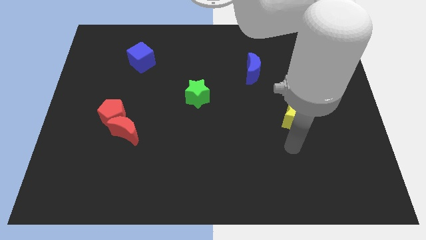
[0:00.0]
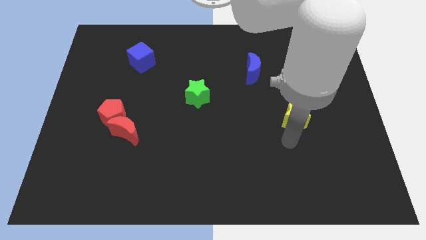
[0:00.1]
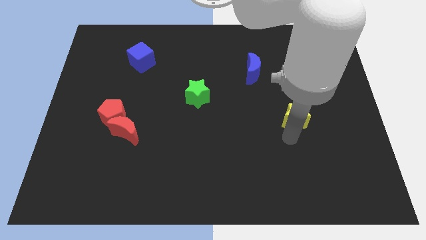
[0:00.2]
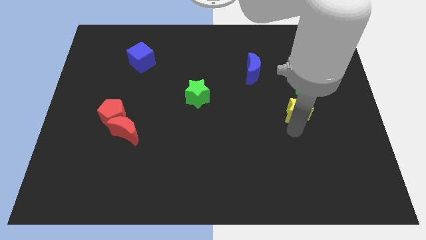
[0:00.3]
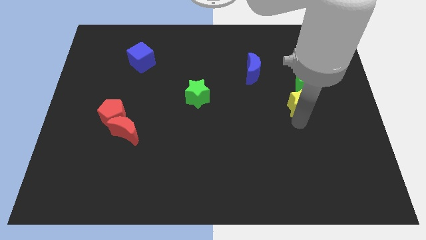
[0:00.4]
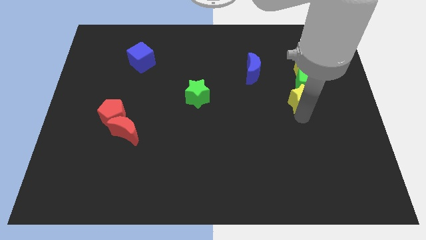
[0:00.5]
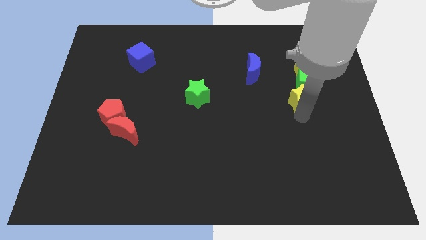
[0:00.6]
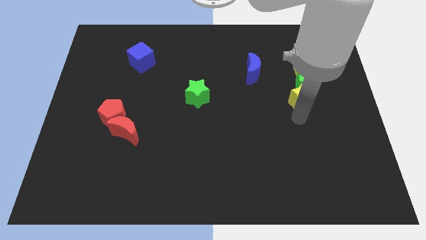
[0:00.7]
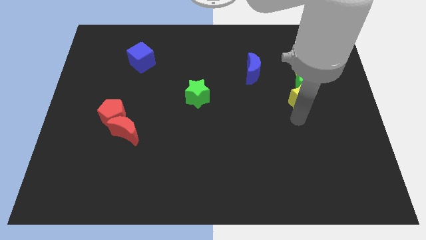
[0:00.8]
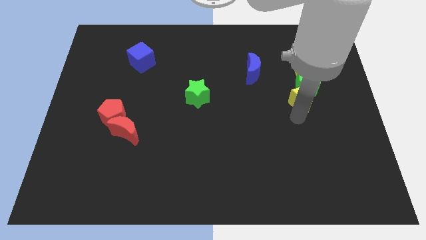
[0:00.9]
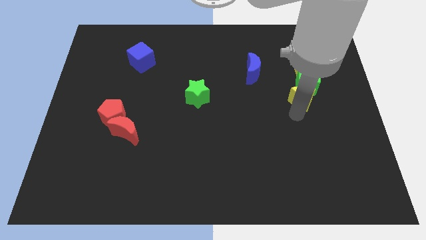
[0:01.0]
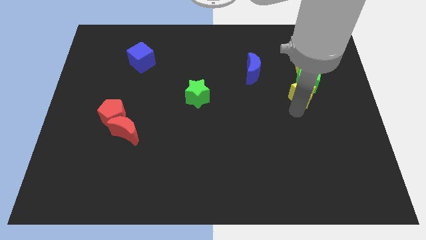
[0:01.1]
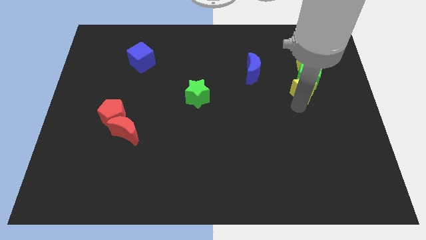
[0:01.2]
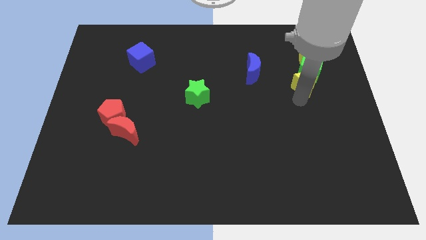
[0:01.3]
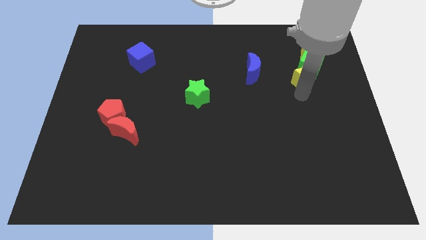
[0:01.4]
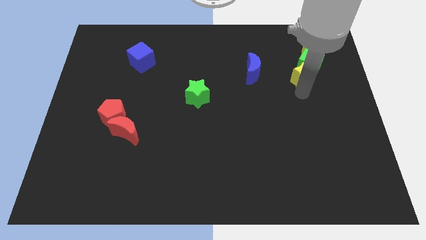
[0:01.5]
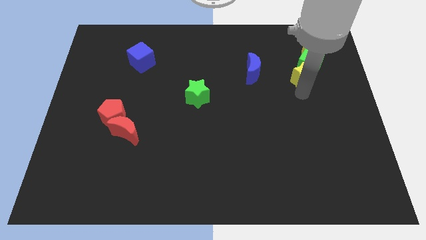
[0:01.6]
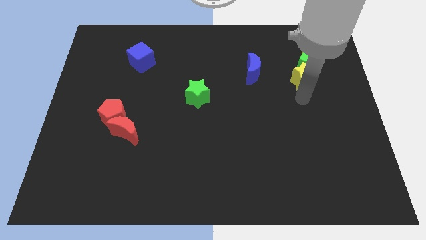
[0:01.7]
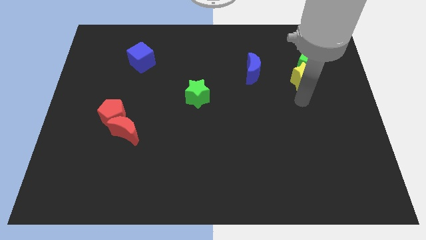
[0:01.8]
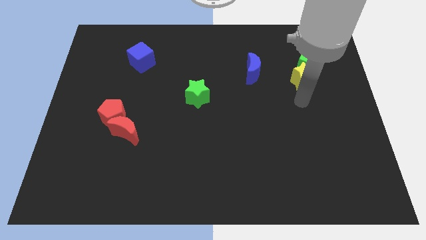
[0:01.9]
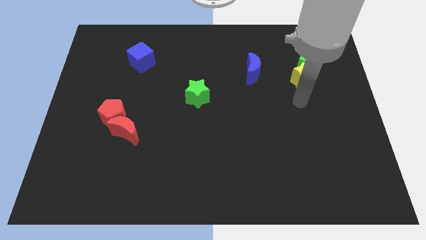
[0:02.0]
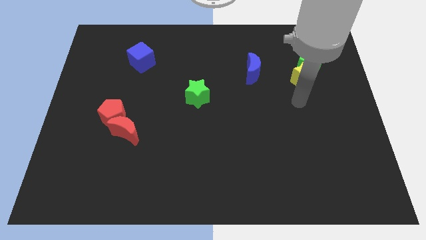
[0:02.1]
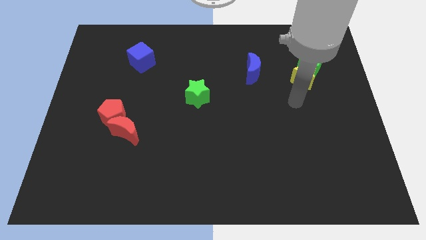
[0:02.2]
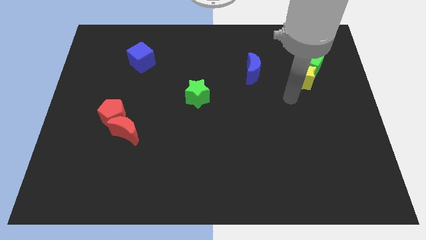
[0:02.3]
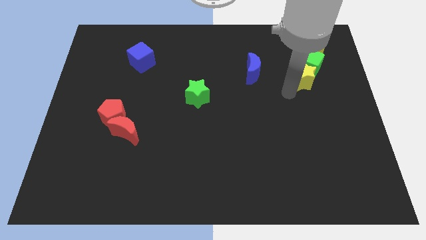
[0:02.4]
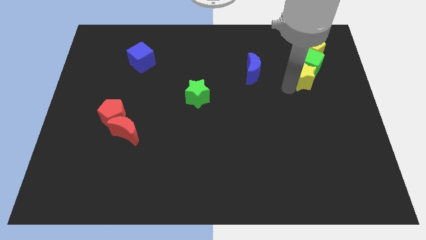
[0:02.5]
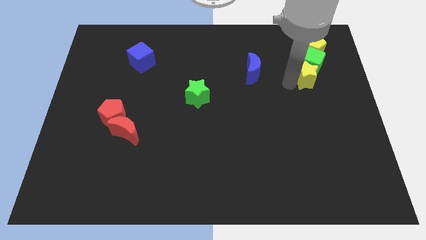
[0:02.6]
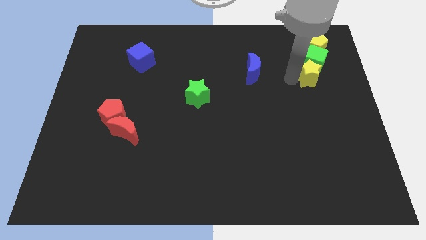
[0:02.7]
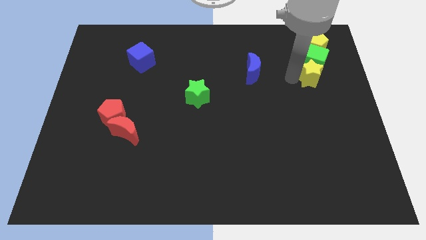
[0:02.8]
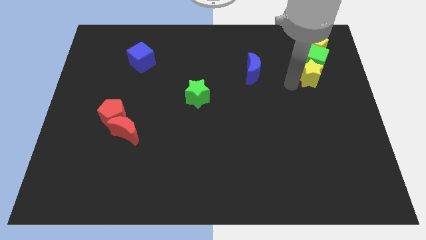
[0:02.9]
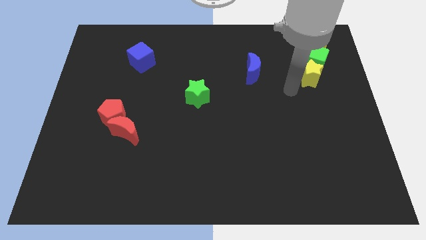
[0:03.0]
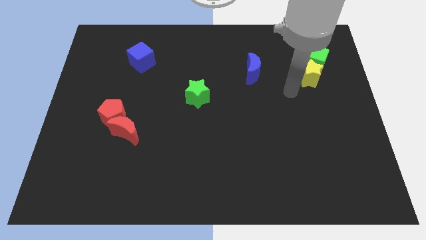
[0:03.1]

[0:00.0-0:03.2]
push yellow star into the green cube

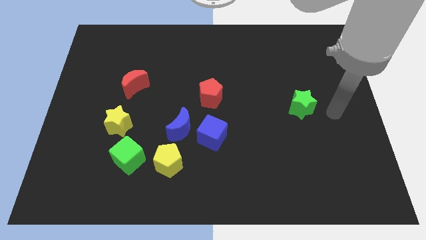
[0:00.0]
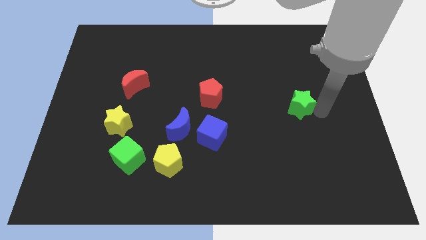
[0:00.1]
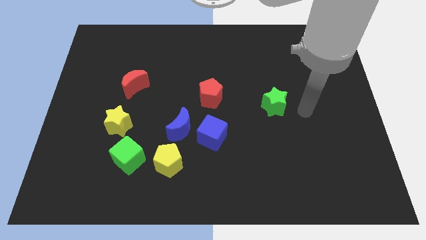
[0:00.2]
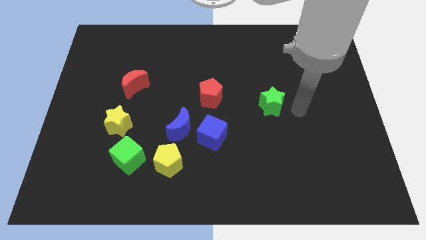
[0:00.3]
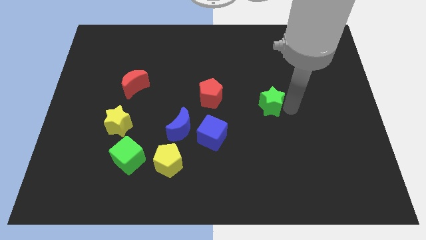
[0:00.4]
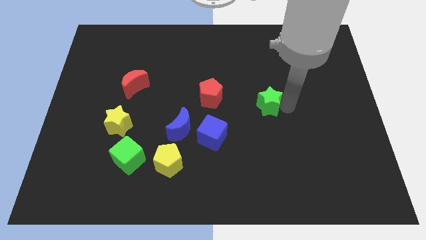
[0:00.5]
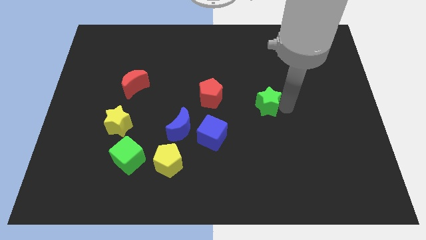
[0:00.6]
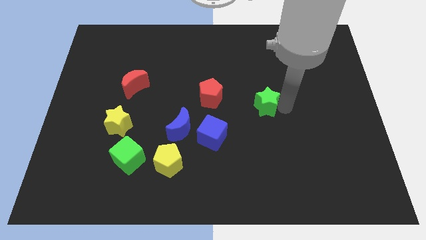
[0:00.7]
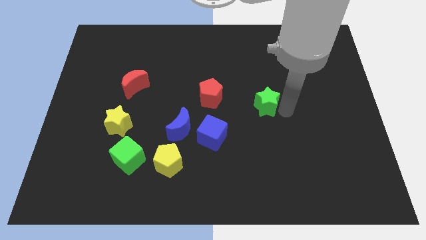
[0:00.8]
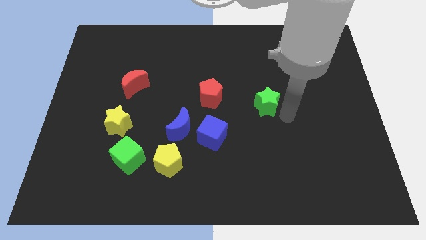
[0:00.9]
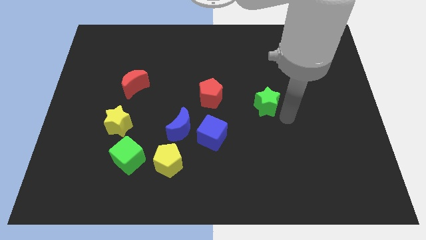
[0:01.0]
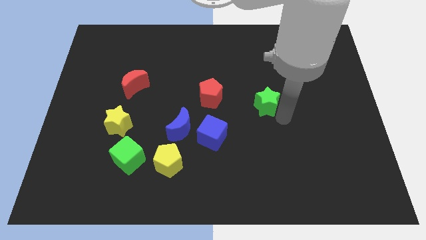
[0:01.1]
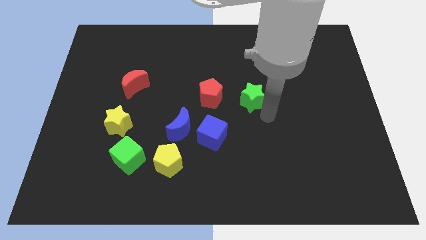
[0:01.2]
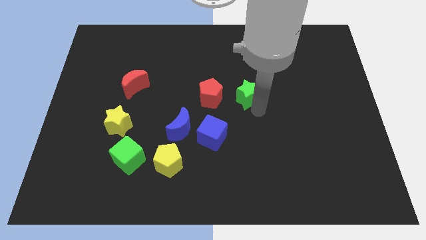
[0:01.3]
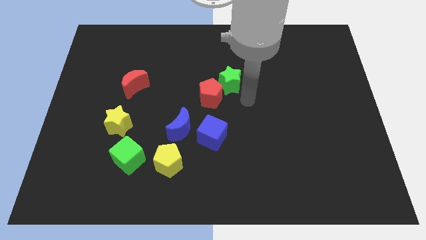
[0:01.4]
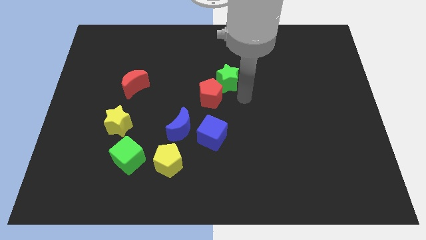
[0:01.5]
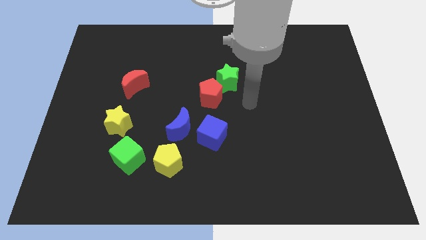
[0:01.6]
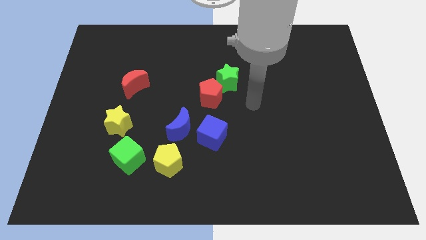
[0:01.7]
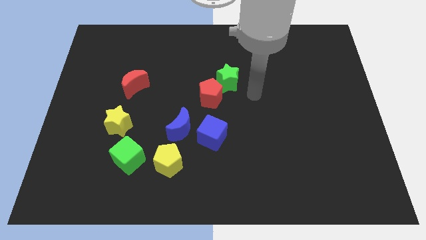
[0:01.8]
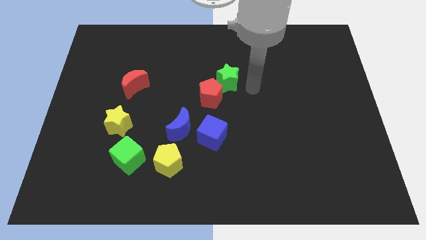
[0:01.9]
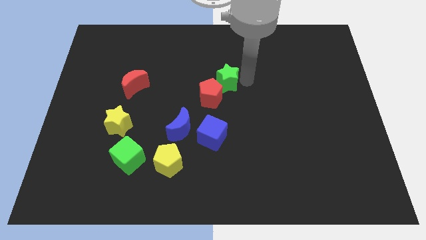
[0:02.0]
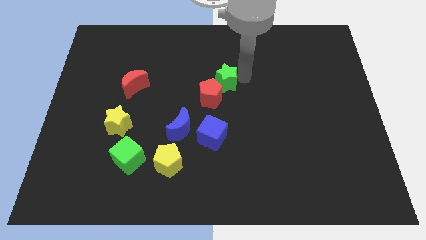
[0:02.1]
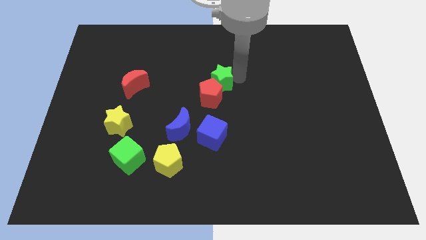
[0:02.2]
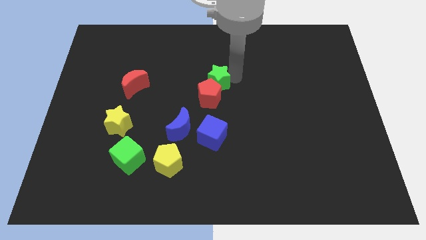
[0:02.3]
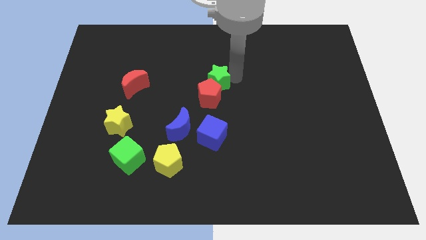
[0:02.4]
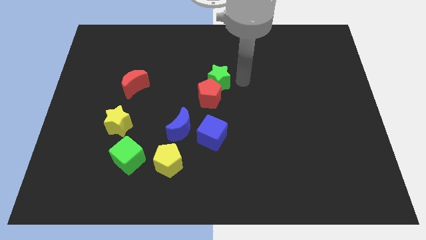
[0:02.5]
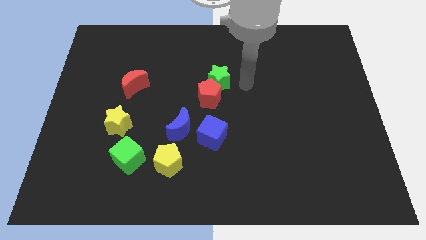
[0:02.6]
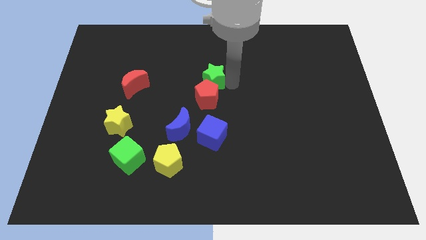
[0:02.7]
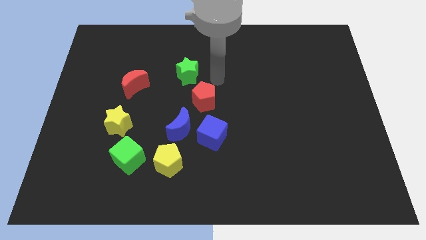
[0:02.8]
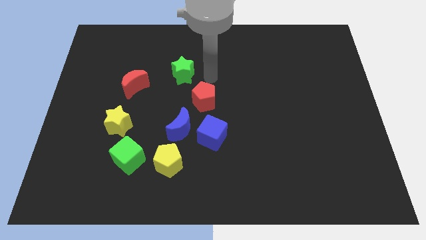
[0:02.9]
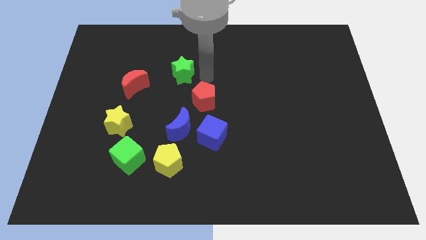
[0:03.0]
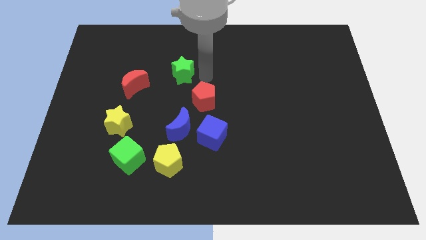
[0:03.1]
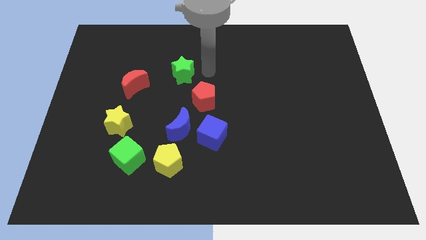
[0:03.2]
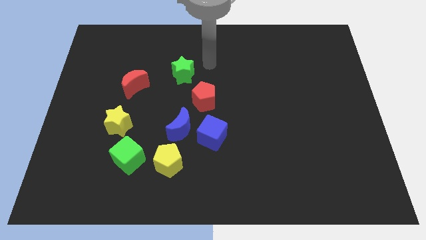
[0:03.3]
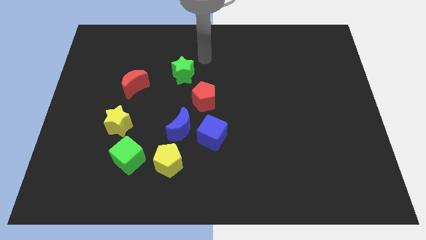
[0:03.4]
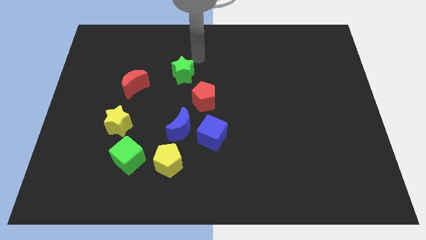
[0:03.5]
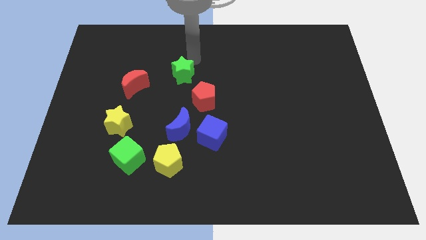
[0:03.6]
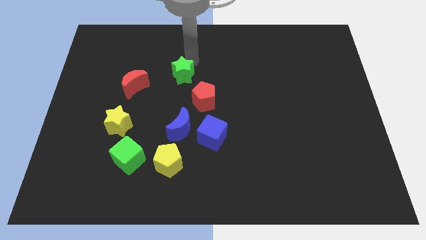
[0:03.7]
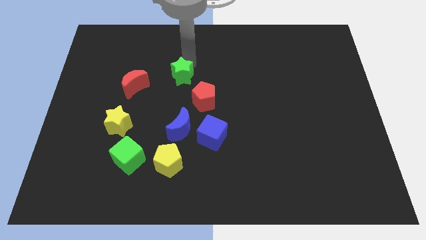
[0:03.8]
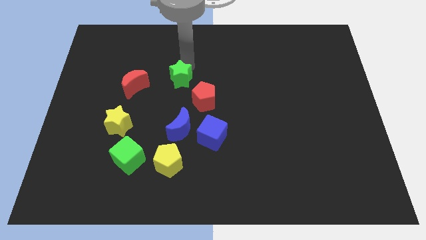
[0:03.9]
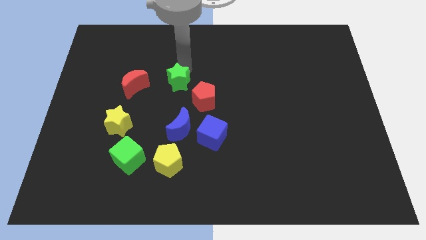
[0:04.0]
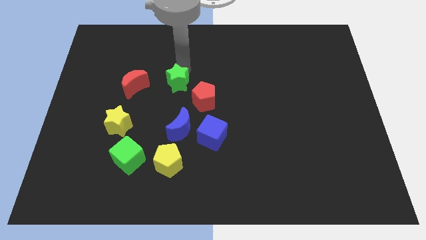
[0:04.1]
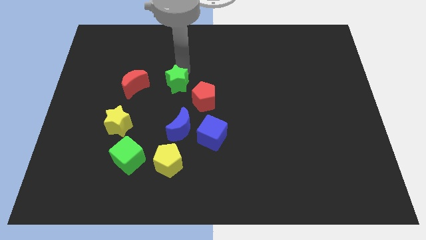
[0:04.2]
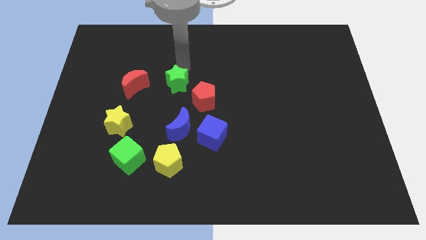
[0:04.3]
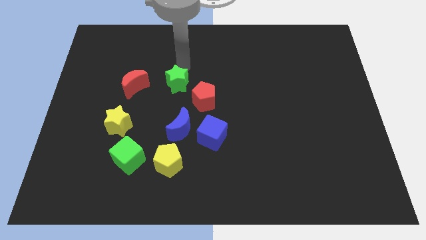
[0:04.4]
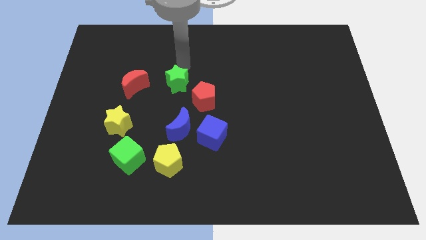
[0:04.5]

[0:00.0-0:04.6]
slide the green star diagonally top left to the red pentagon

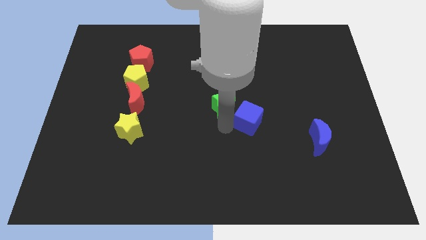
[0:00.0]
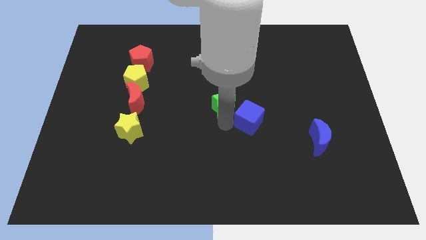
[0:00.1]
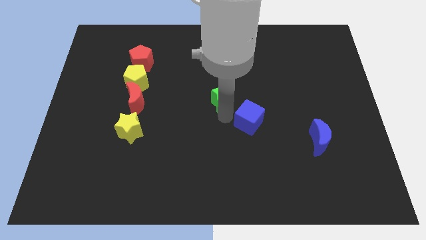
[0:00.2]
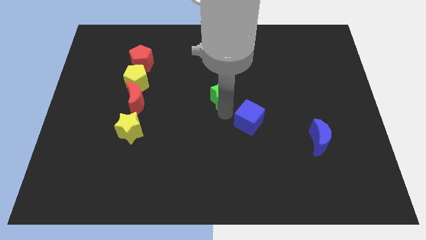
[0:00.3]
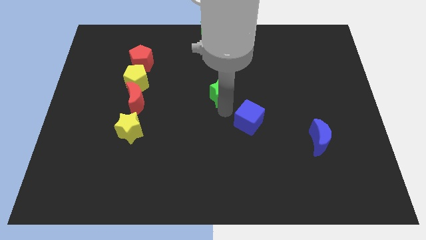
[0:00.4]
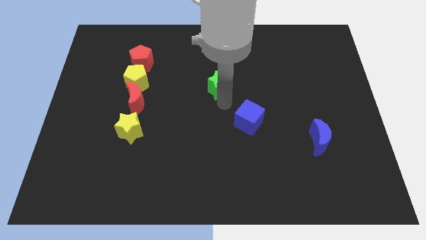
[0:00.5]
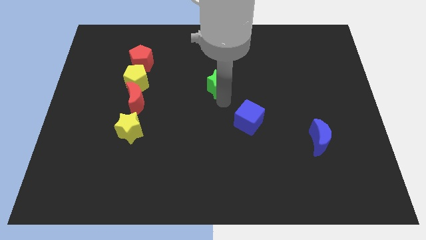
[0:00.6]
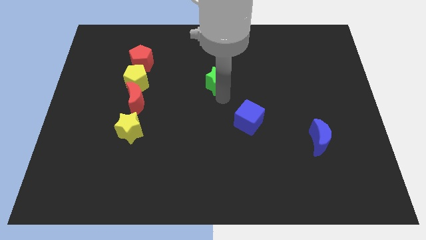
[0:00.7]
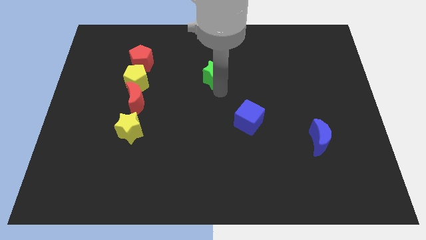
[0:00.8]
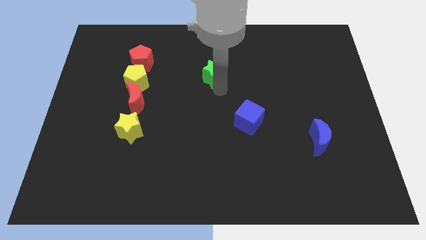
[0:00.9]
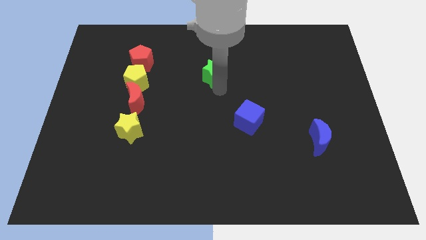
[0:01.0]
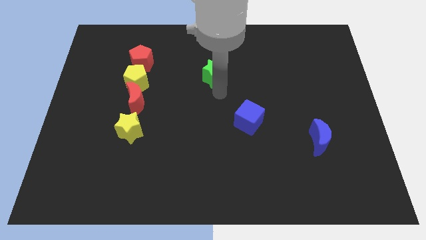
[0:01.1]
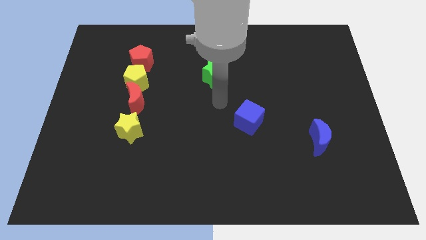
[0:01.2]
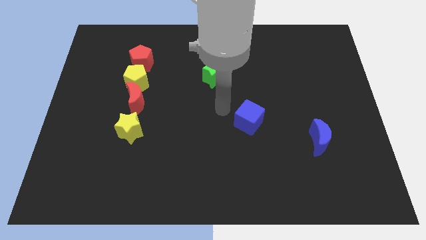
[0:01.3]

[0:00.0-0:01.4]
slide the green star upwards
